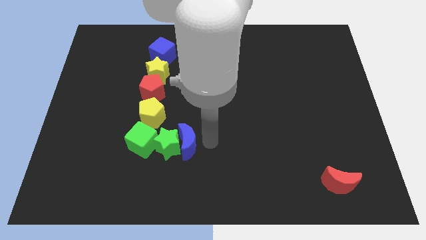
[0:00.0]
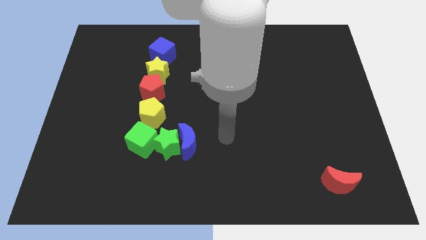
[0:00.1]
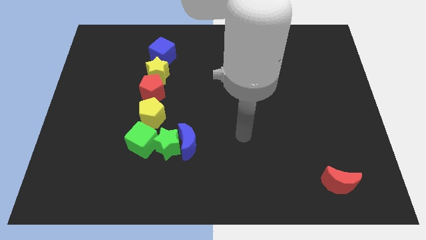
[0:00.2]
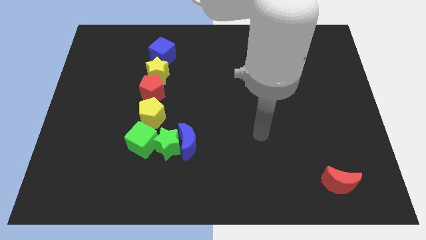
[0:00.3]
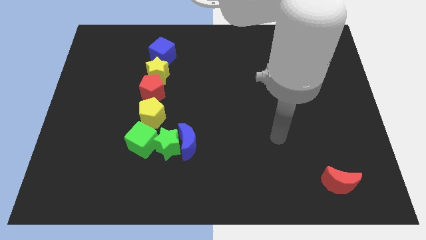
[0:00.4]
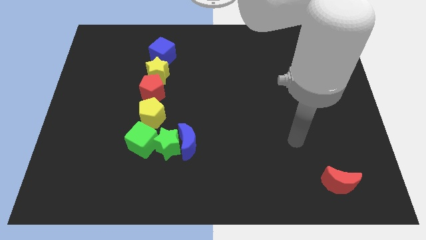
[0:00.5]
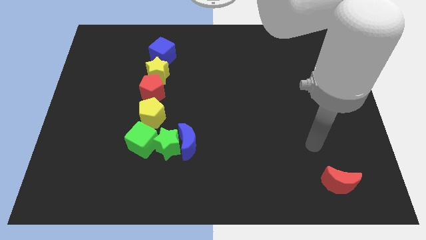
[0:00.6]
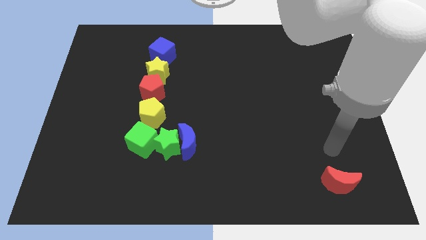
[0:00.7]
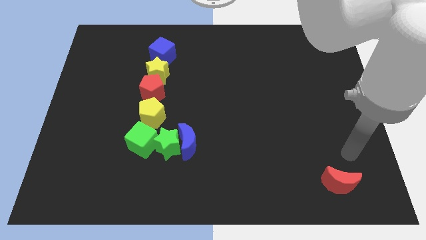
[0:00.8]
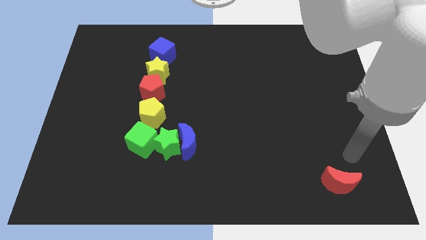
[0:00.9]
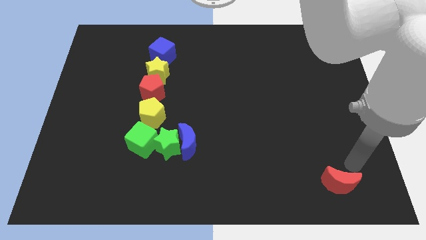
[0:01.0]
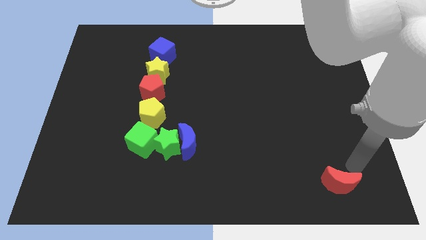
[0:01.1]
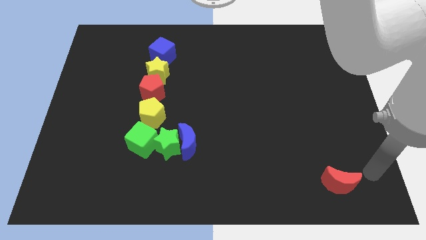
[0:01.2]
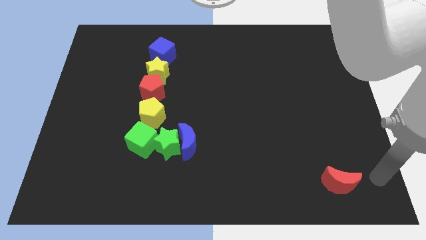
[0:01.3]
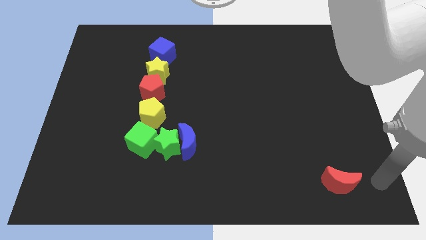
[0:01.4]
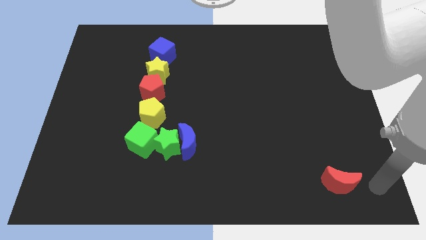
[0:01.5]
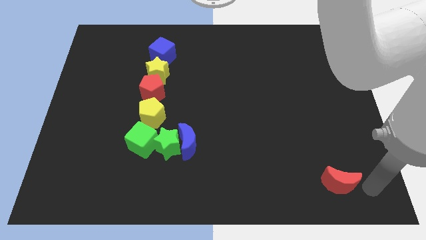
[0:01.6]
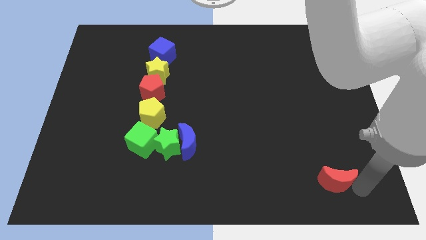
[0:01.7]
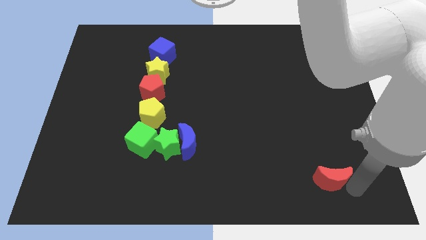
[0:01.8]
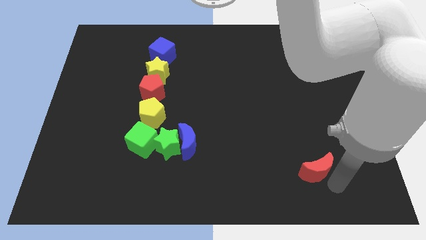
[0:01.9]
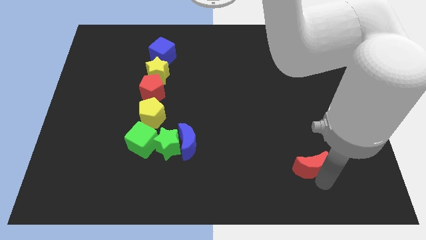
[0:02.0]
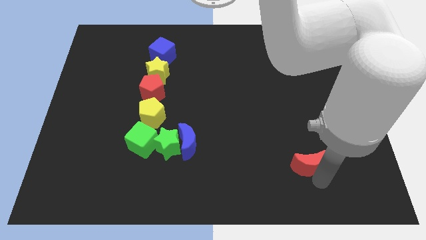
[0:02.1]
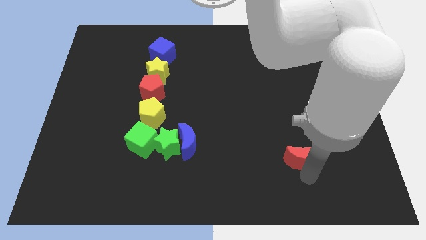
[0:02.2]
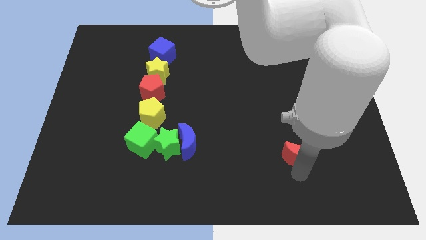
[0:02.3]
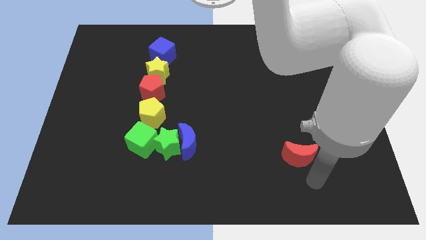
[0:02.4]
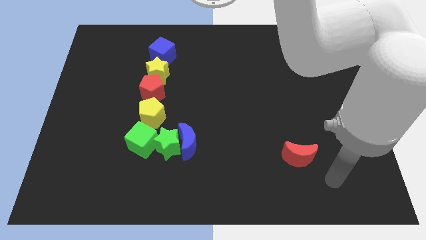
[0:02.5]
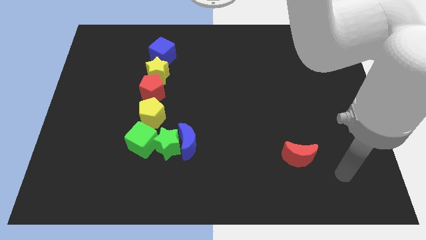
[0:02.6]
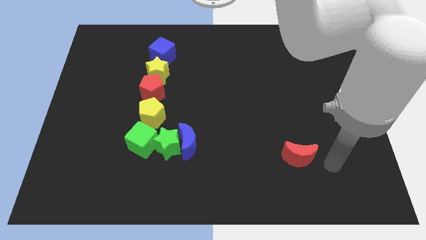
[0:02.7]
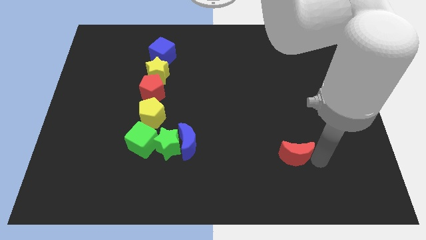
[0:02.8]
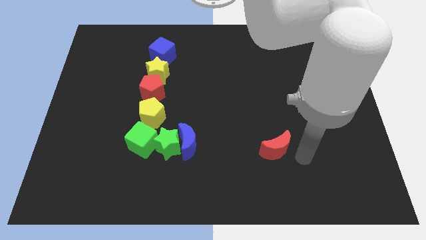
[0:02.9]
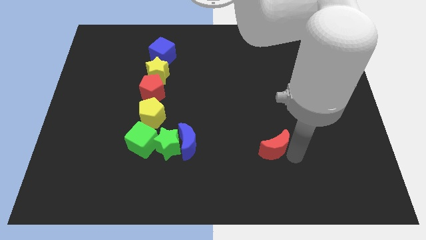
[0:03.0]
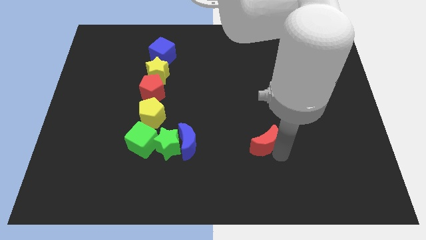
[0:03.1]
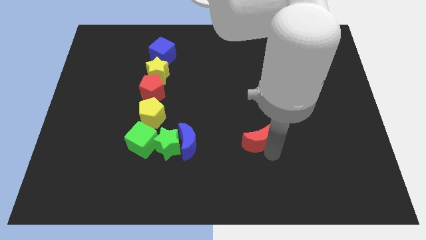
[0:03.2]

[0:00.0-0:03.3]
bring the red moon to the right side of he blue crescent

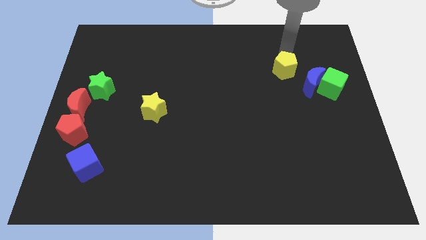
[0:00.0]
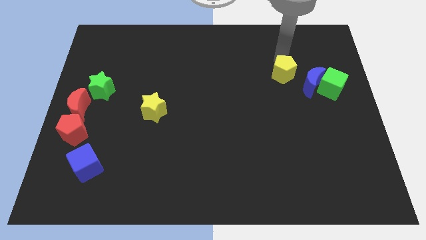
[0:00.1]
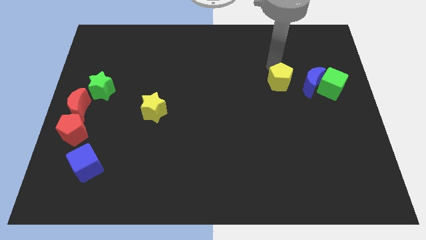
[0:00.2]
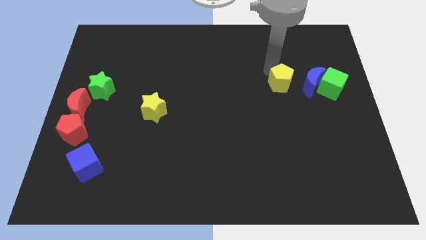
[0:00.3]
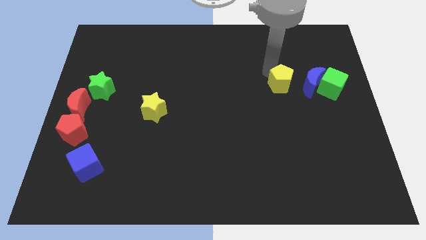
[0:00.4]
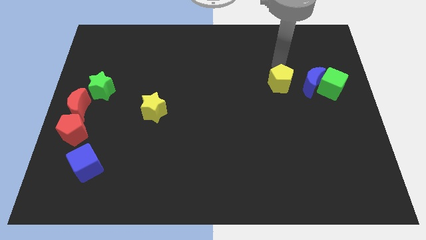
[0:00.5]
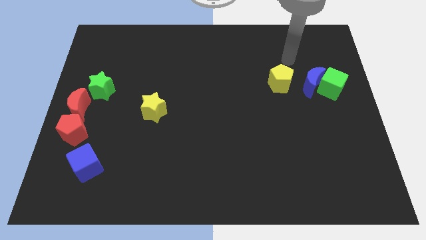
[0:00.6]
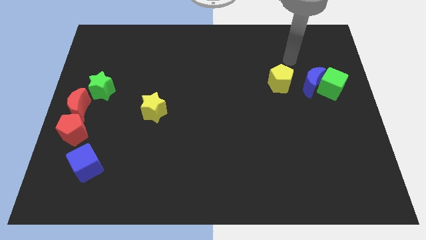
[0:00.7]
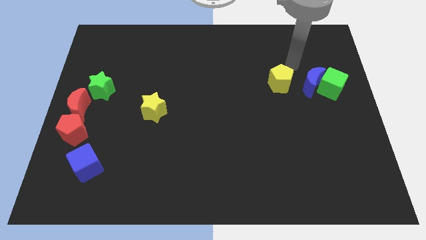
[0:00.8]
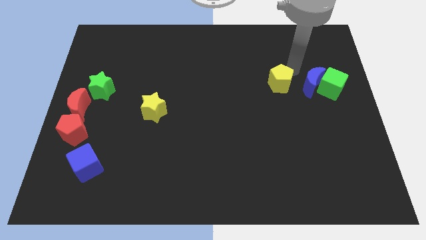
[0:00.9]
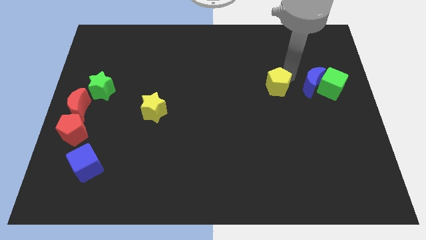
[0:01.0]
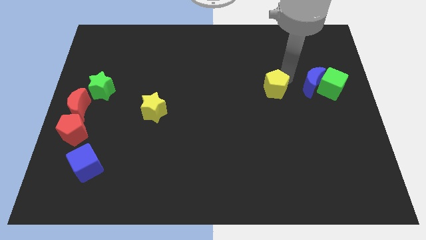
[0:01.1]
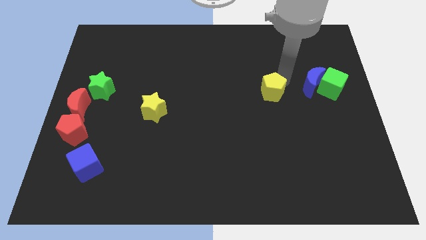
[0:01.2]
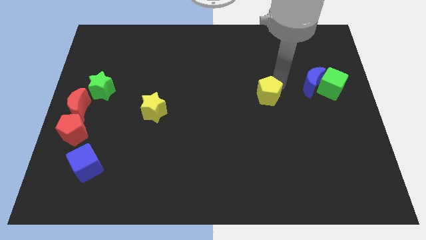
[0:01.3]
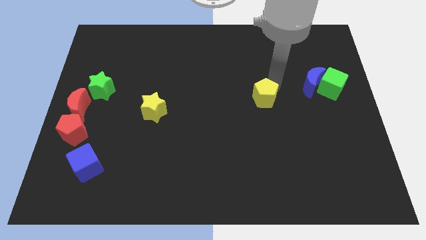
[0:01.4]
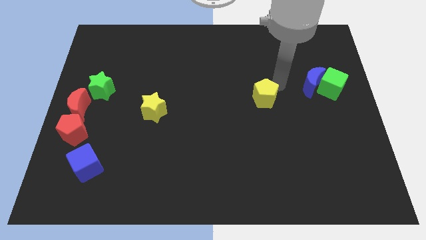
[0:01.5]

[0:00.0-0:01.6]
move the yellow pentagon to the bottom of the board

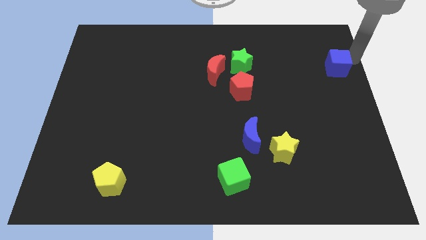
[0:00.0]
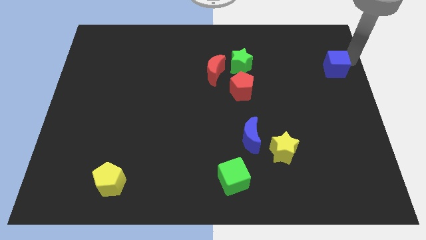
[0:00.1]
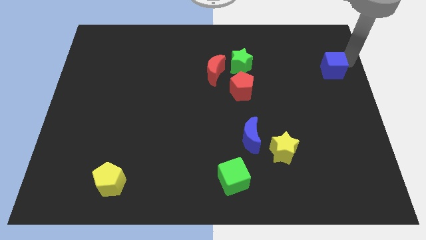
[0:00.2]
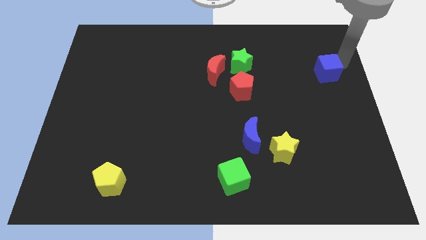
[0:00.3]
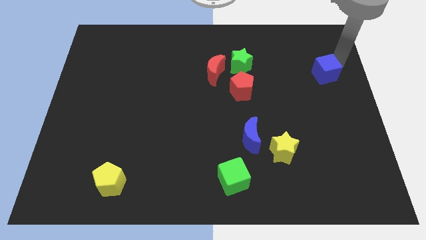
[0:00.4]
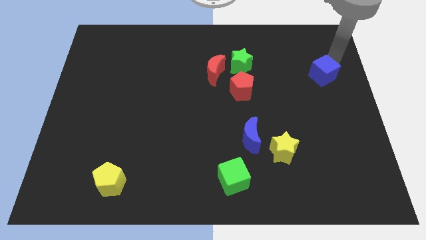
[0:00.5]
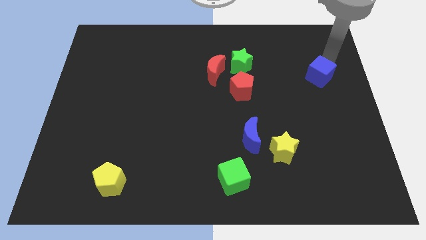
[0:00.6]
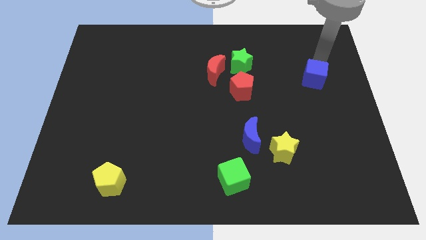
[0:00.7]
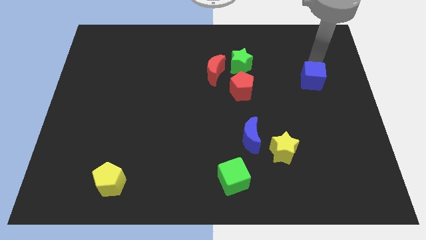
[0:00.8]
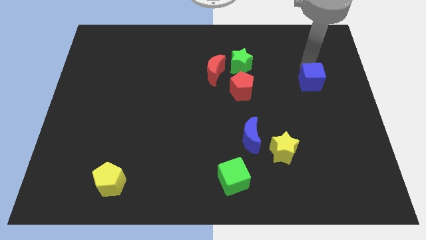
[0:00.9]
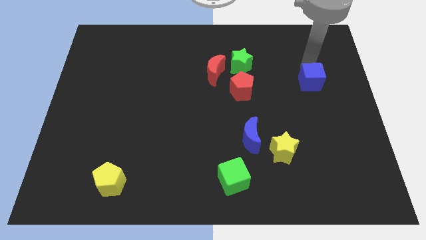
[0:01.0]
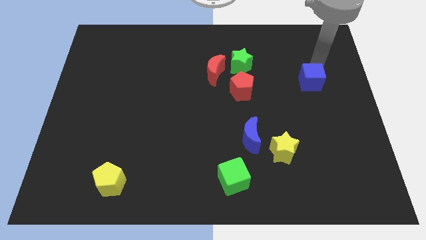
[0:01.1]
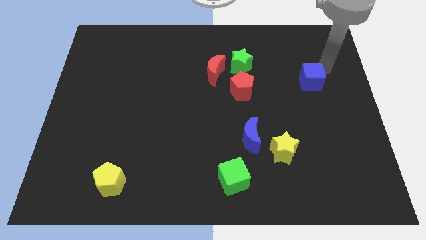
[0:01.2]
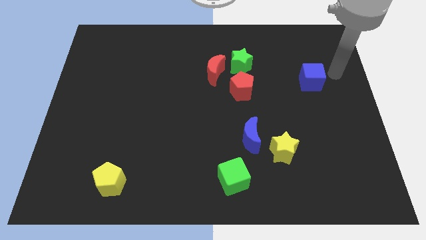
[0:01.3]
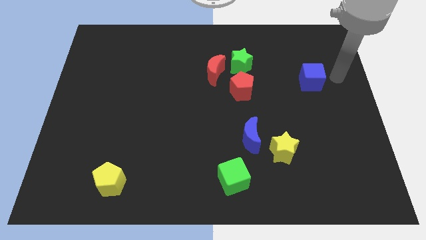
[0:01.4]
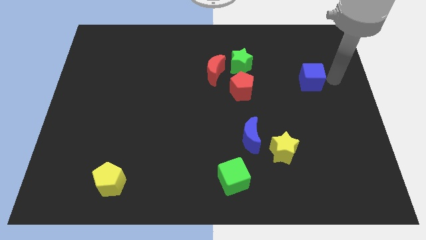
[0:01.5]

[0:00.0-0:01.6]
push the blue cube slightly to the left

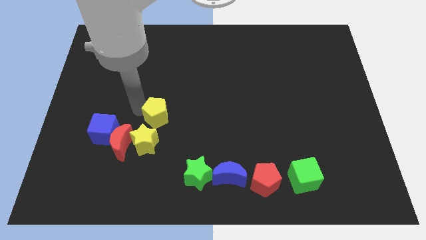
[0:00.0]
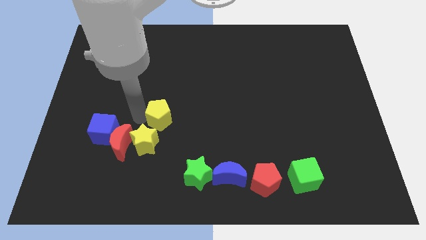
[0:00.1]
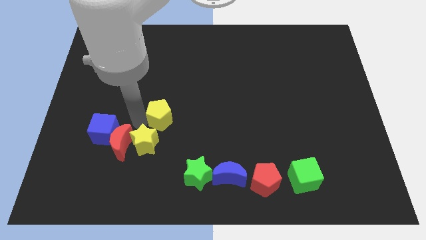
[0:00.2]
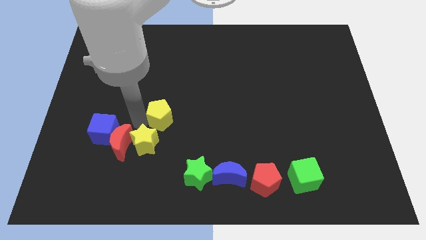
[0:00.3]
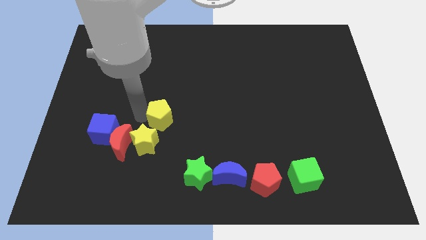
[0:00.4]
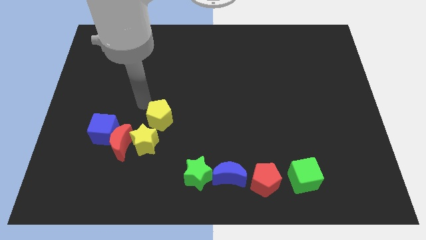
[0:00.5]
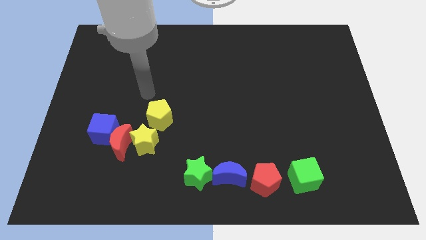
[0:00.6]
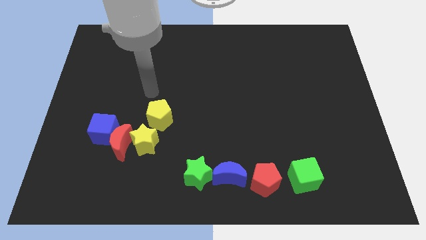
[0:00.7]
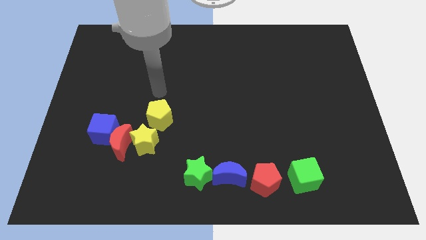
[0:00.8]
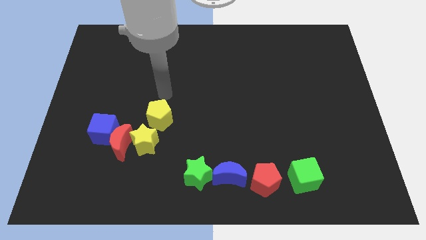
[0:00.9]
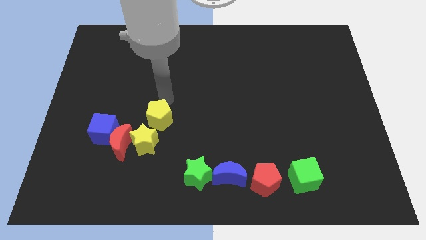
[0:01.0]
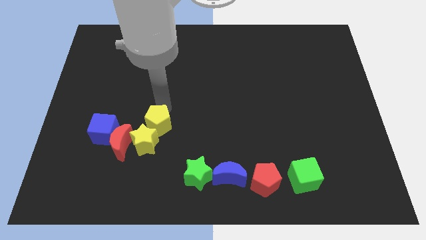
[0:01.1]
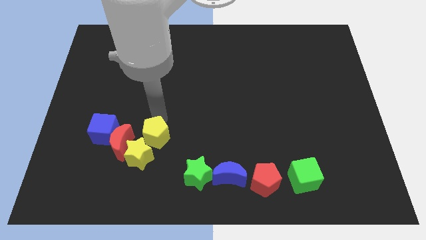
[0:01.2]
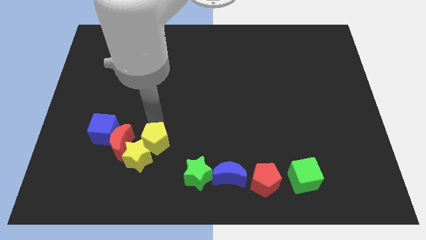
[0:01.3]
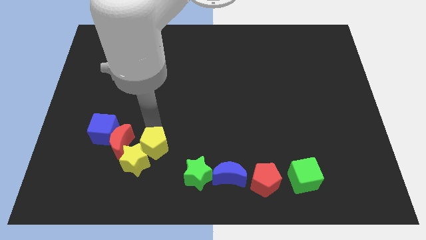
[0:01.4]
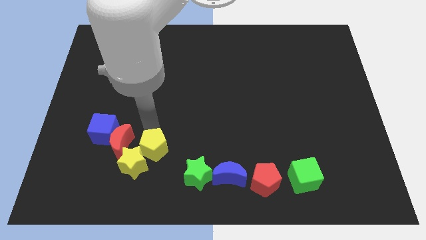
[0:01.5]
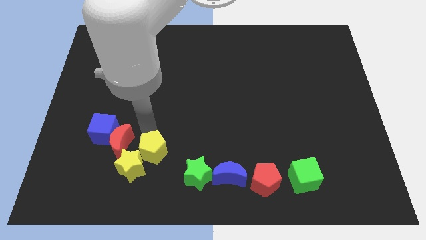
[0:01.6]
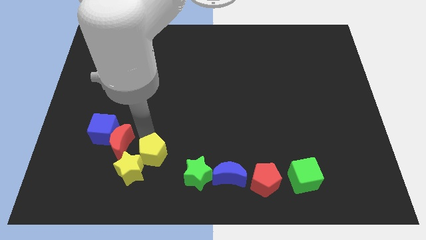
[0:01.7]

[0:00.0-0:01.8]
move the yellow pentagon into the yellow star

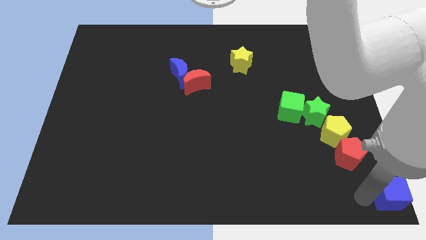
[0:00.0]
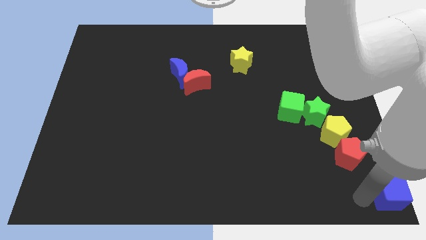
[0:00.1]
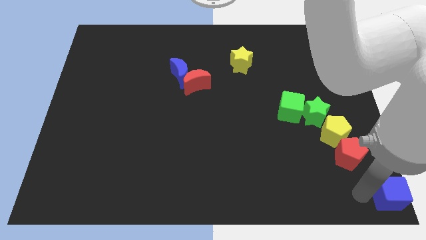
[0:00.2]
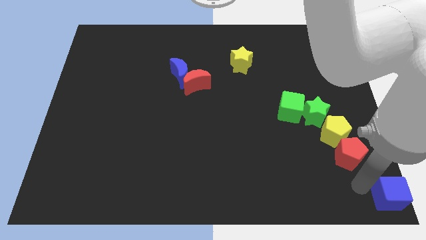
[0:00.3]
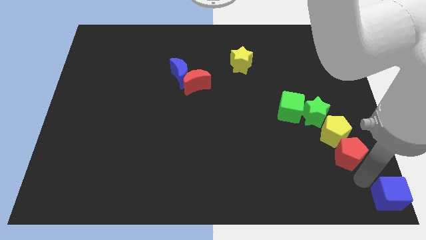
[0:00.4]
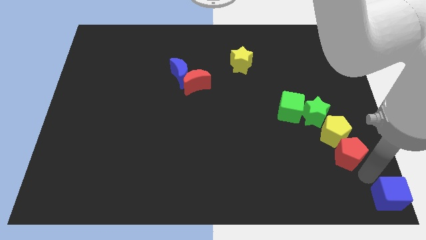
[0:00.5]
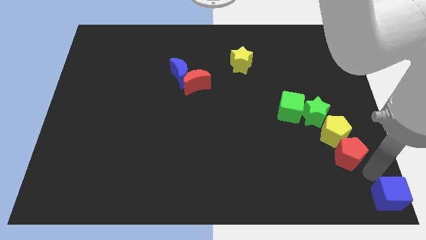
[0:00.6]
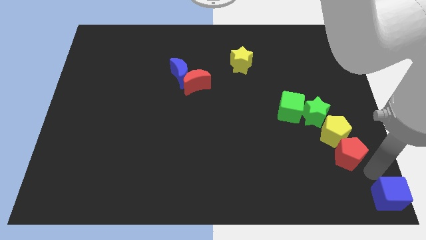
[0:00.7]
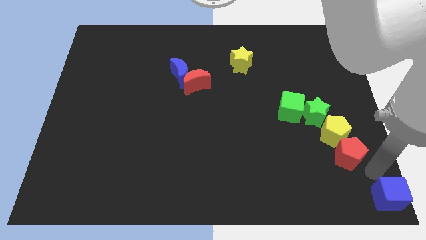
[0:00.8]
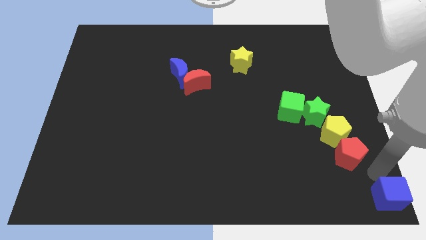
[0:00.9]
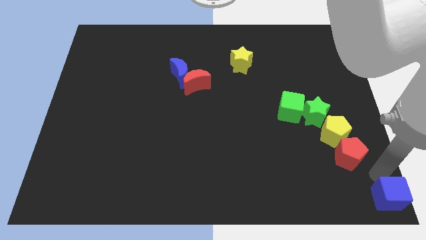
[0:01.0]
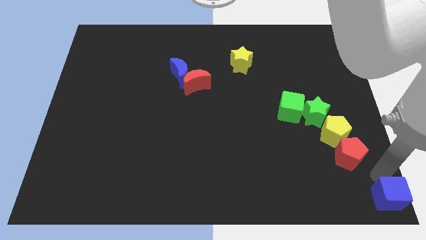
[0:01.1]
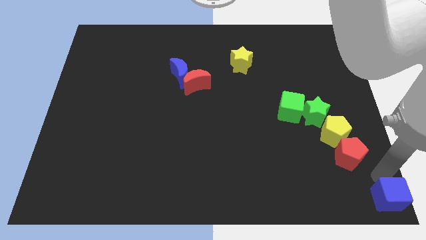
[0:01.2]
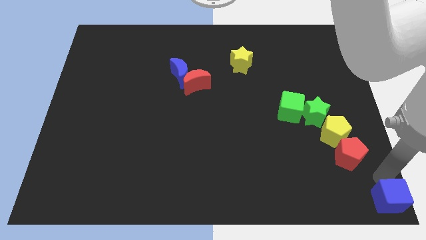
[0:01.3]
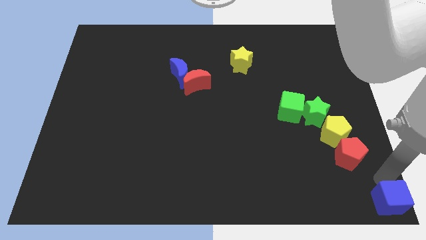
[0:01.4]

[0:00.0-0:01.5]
place your arm on the top of blue cube
